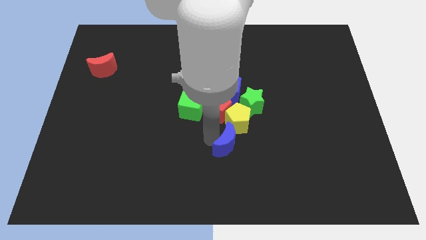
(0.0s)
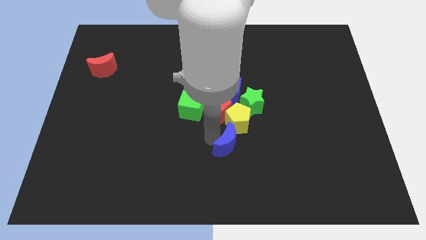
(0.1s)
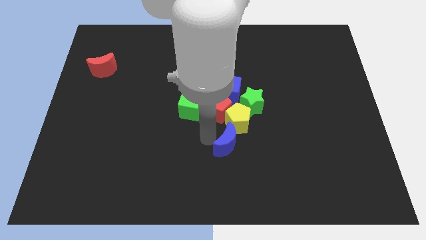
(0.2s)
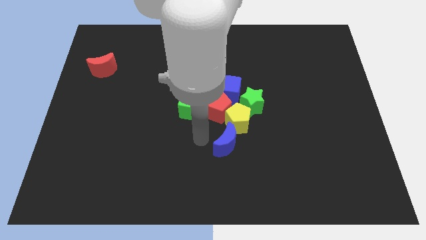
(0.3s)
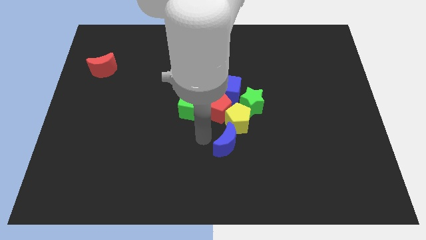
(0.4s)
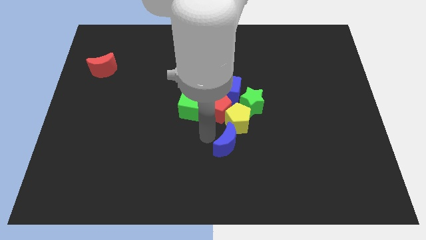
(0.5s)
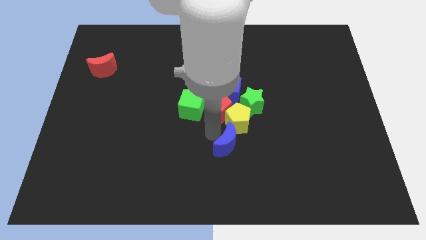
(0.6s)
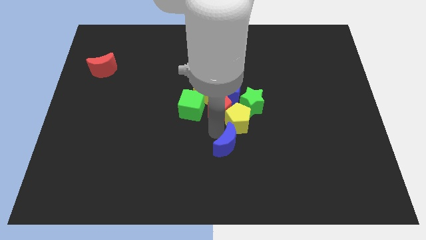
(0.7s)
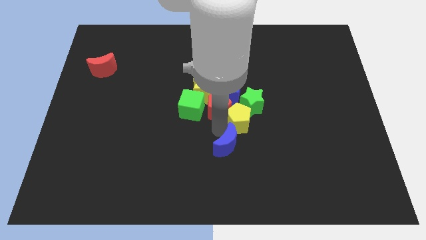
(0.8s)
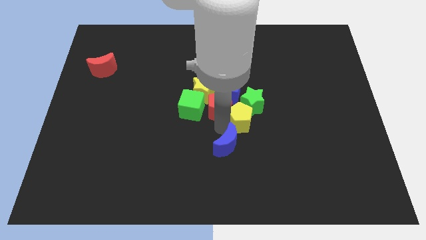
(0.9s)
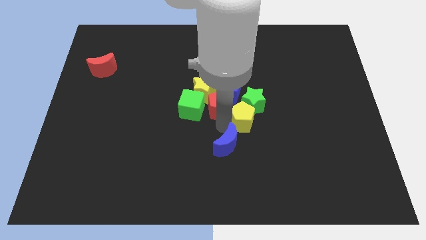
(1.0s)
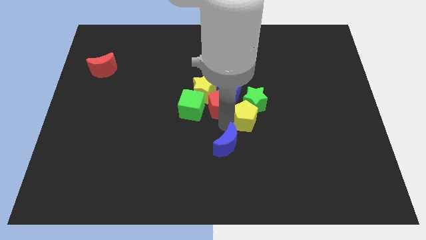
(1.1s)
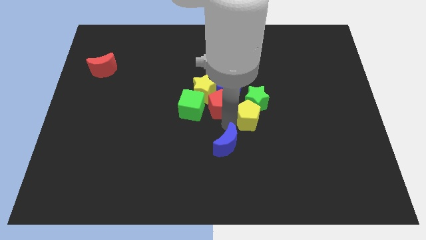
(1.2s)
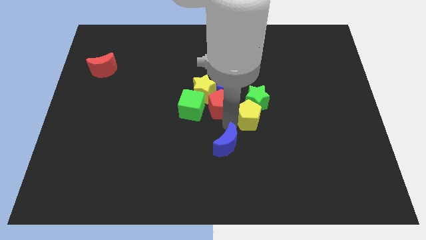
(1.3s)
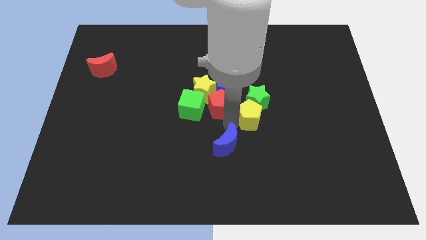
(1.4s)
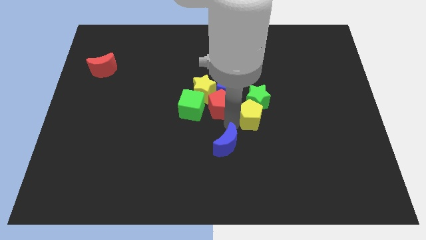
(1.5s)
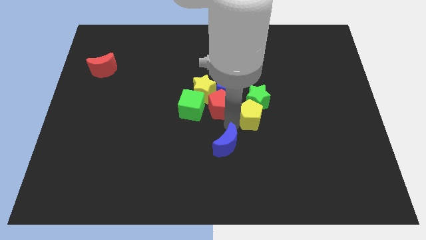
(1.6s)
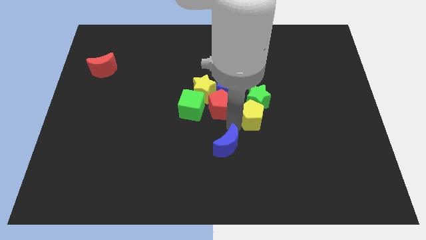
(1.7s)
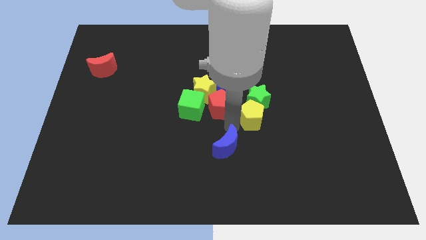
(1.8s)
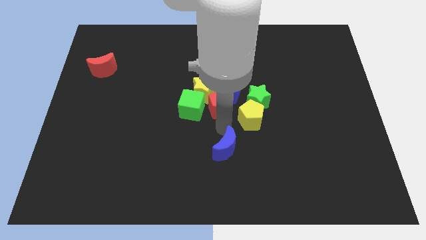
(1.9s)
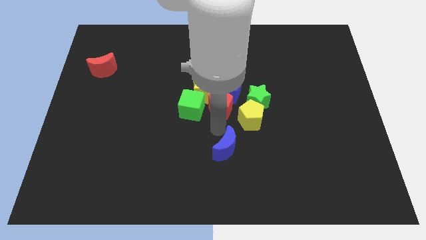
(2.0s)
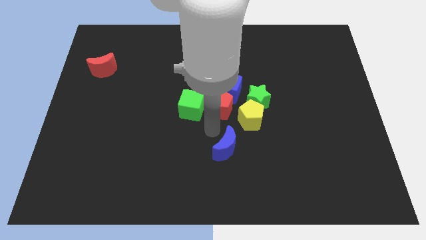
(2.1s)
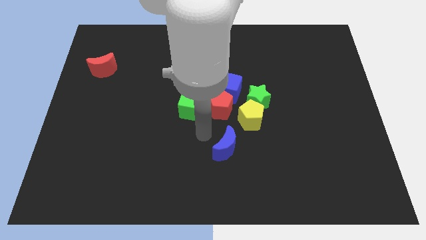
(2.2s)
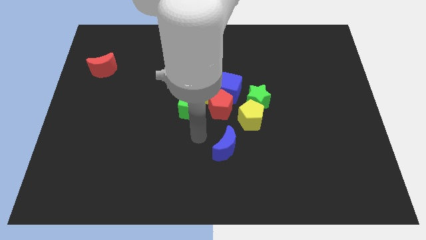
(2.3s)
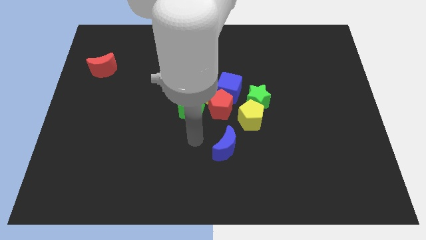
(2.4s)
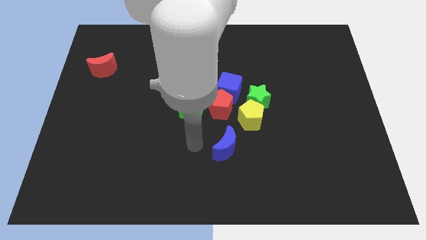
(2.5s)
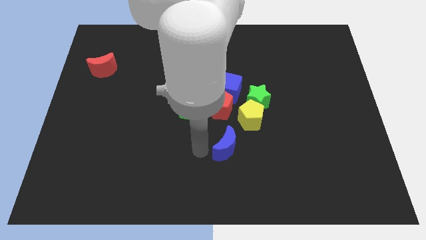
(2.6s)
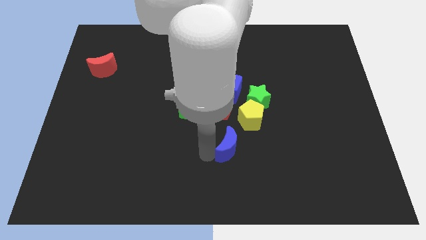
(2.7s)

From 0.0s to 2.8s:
separate blue moon from yellow pentagon

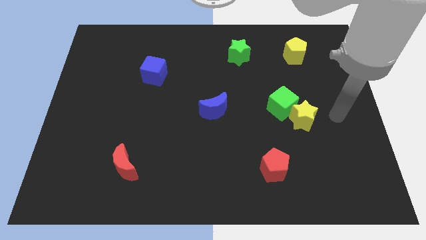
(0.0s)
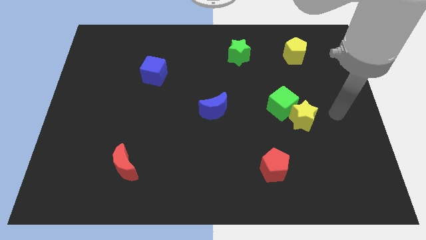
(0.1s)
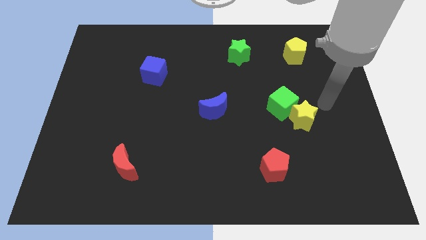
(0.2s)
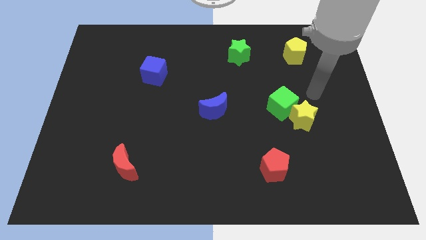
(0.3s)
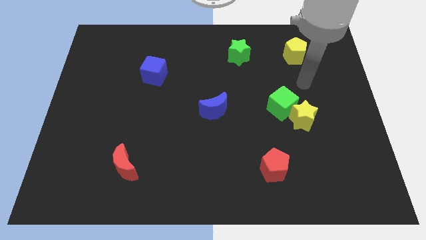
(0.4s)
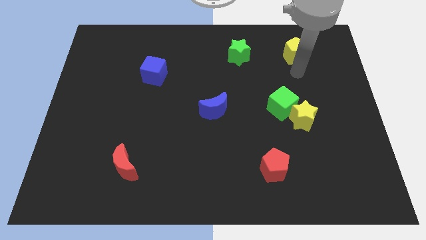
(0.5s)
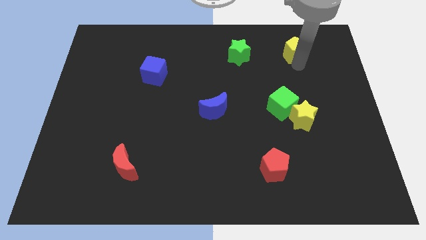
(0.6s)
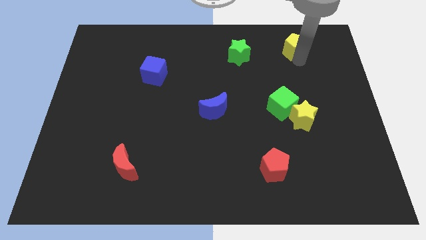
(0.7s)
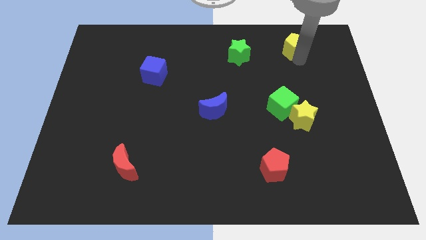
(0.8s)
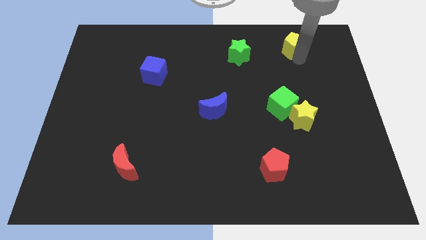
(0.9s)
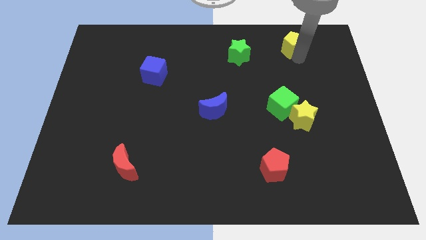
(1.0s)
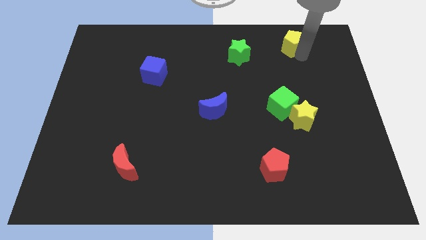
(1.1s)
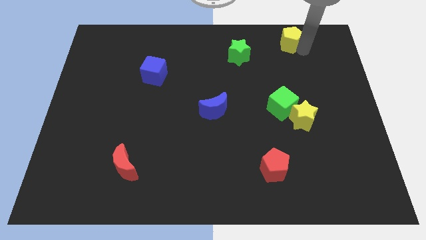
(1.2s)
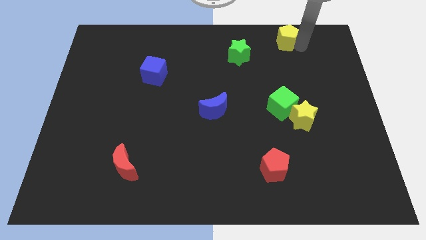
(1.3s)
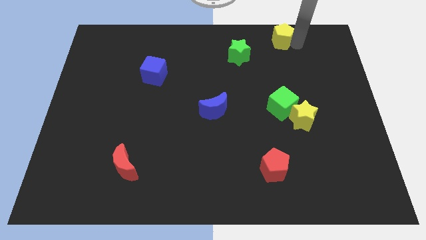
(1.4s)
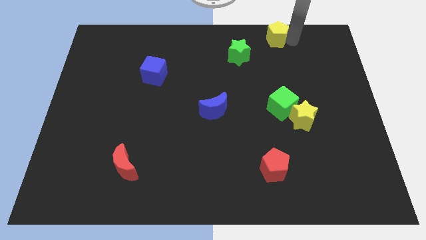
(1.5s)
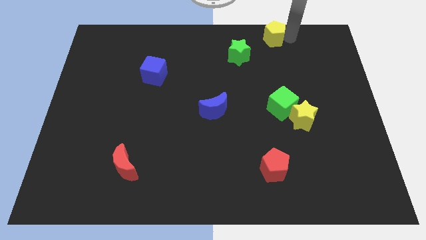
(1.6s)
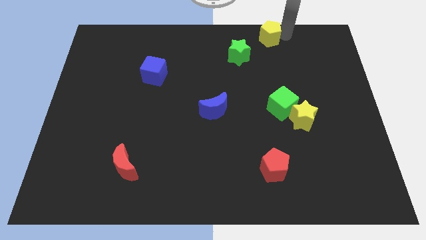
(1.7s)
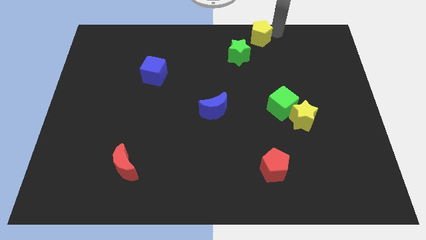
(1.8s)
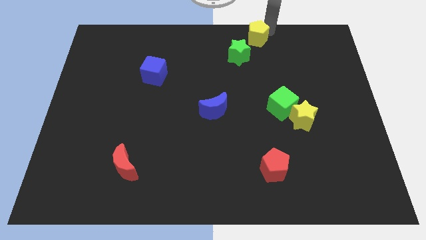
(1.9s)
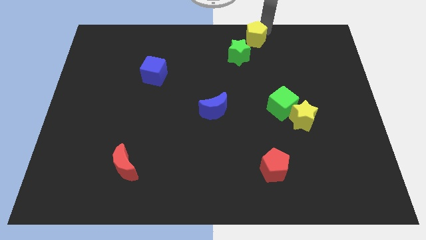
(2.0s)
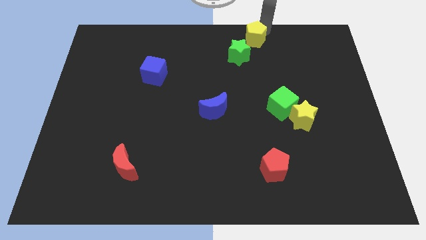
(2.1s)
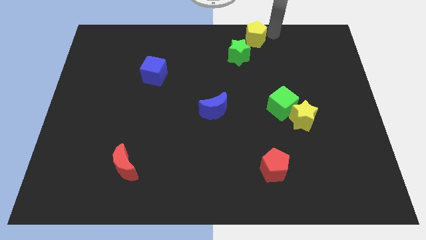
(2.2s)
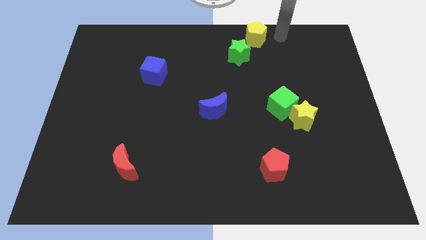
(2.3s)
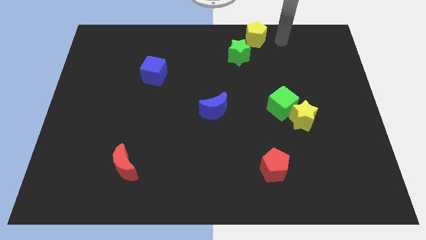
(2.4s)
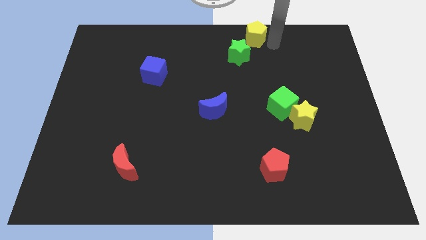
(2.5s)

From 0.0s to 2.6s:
push the yellow pentagon to the top right side of the green star

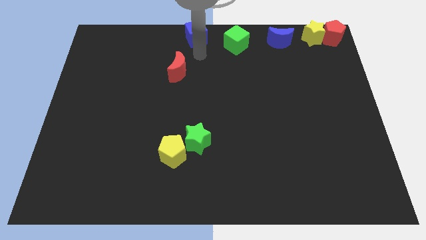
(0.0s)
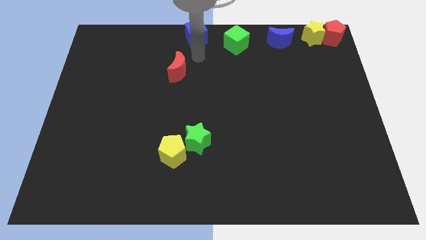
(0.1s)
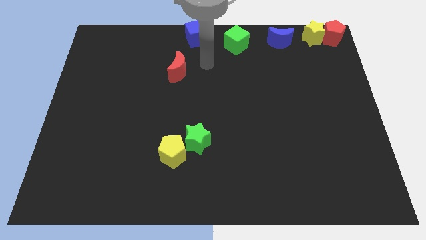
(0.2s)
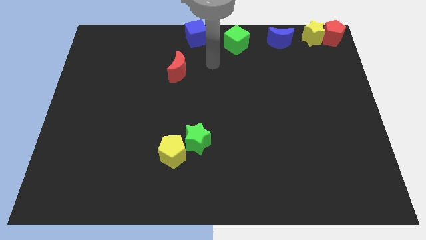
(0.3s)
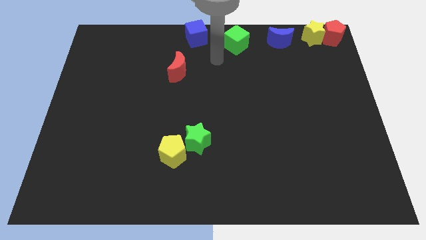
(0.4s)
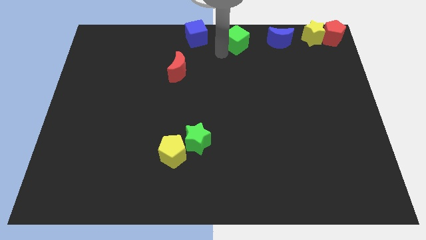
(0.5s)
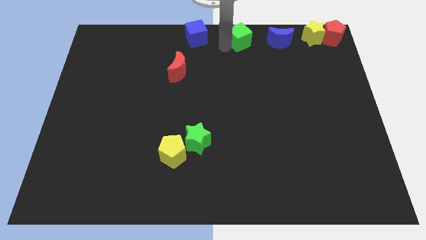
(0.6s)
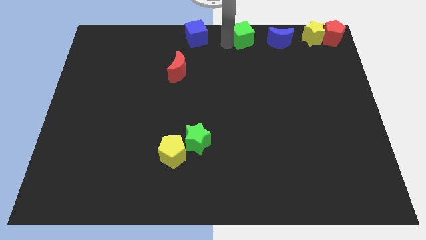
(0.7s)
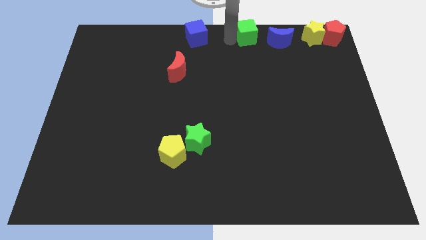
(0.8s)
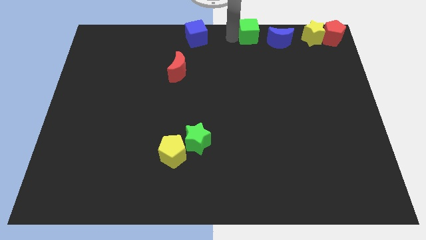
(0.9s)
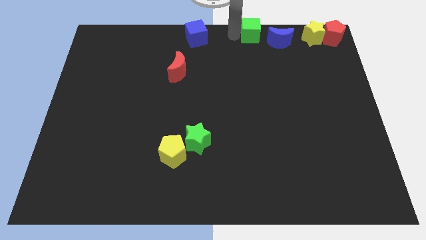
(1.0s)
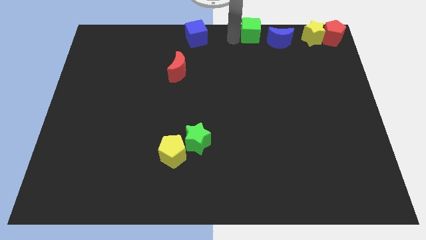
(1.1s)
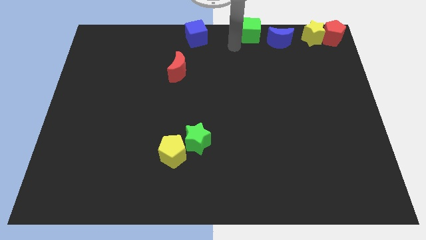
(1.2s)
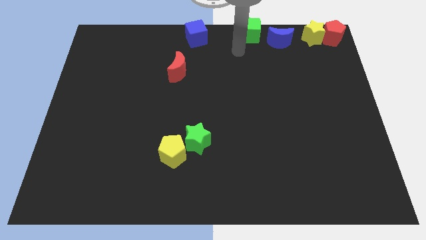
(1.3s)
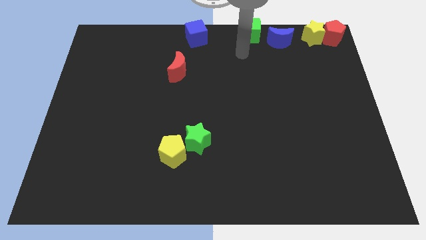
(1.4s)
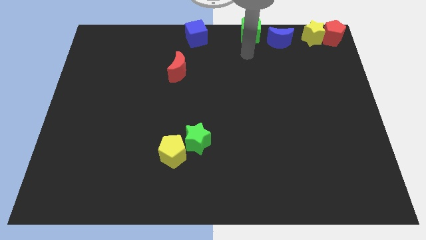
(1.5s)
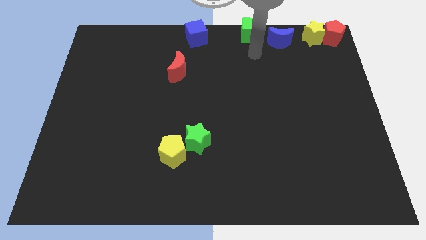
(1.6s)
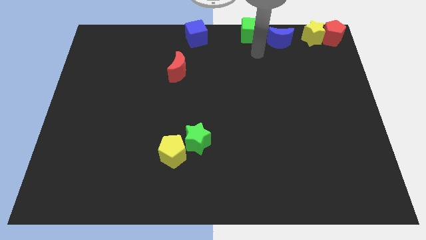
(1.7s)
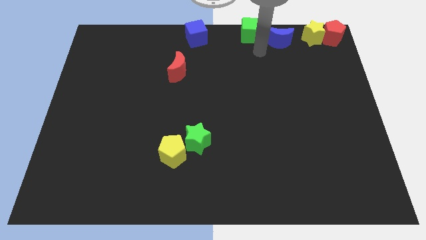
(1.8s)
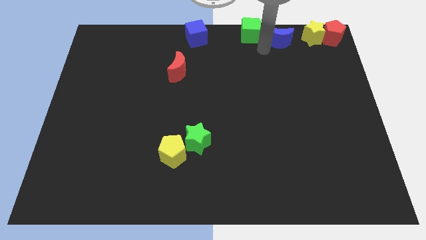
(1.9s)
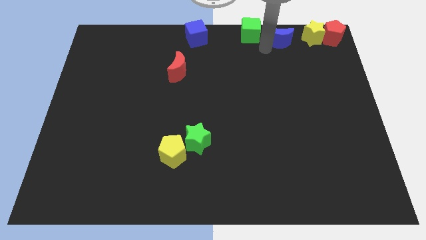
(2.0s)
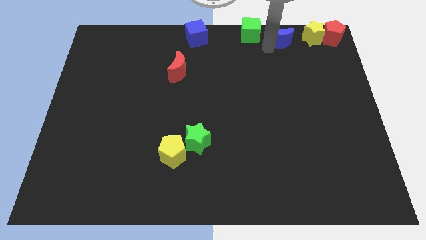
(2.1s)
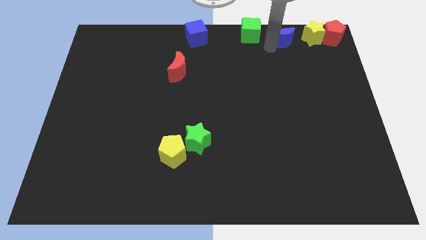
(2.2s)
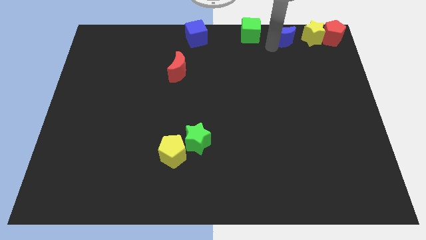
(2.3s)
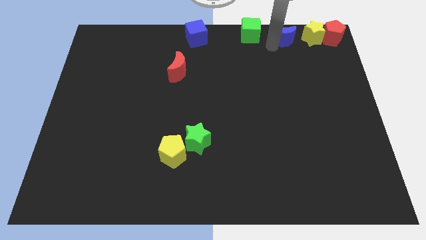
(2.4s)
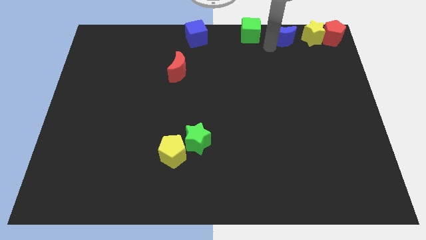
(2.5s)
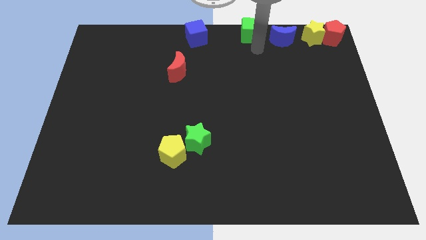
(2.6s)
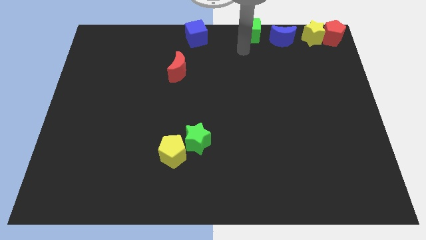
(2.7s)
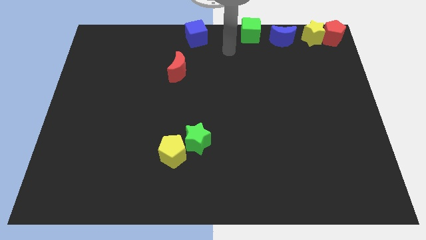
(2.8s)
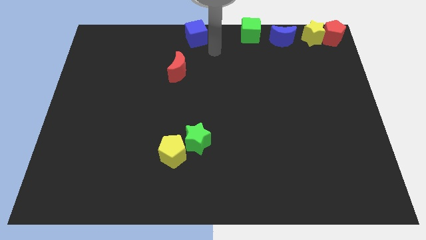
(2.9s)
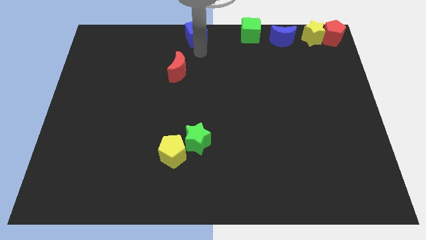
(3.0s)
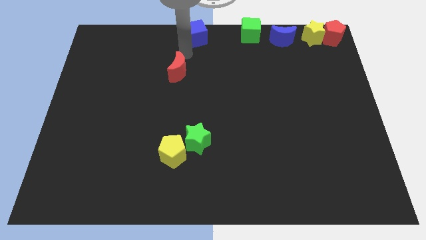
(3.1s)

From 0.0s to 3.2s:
push the green cube to the right side of the board

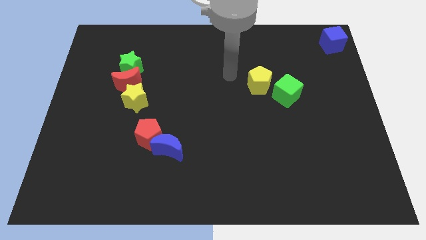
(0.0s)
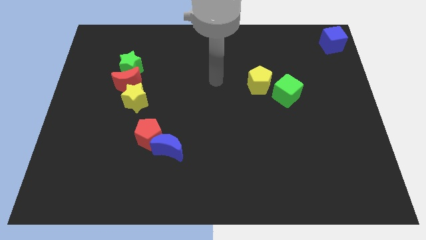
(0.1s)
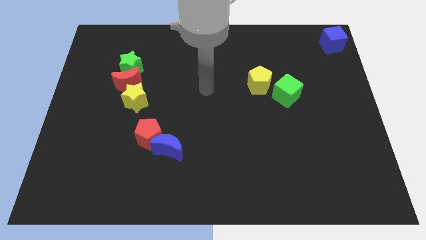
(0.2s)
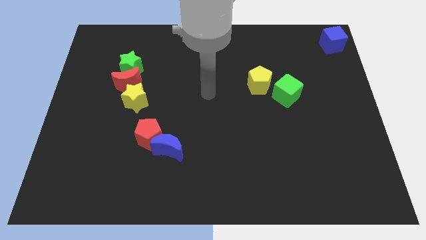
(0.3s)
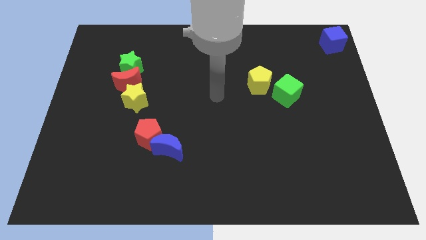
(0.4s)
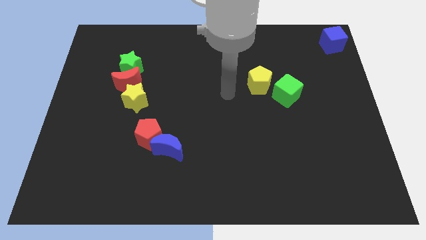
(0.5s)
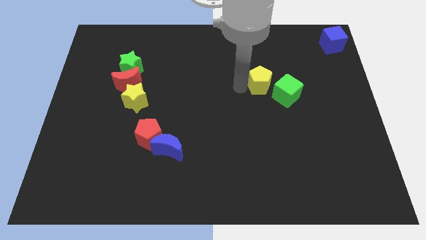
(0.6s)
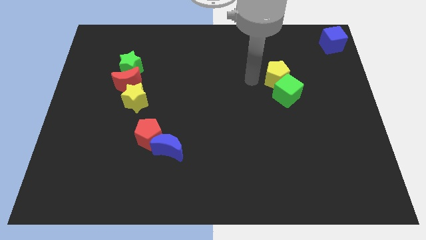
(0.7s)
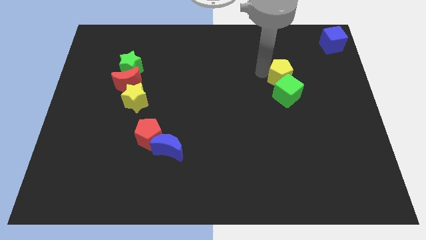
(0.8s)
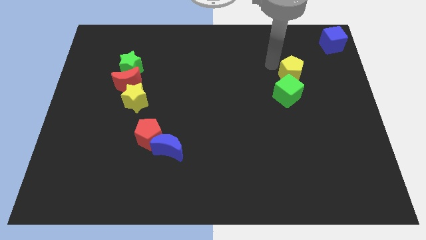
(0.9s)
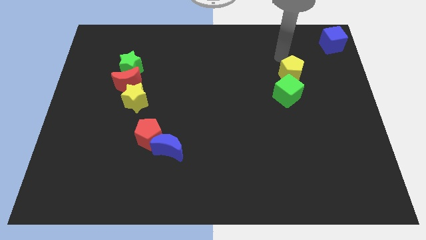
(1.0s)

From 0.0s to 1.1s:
push the yellow pentagon to the top right to the green cube
